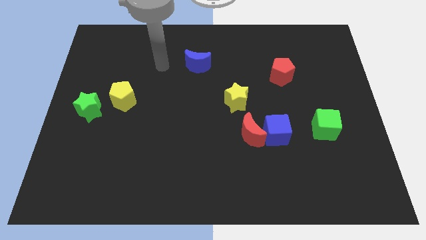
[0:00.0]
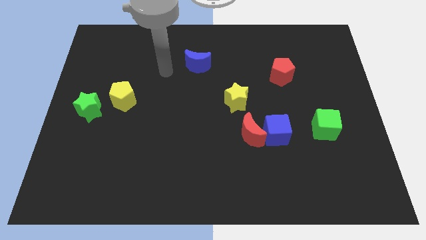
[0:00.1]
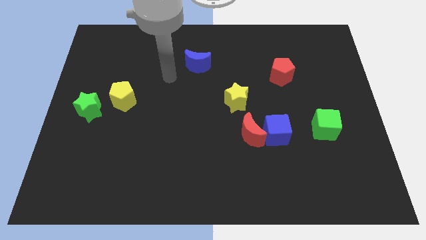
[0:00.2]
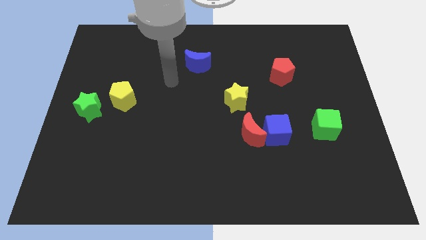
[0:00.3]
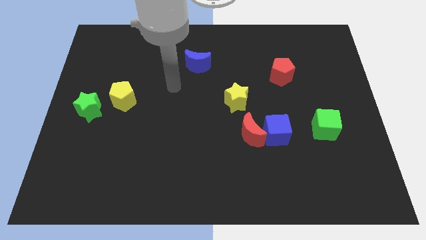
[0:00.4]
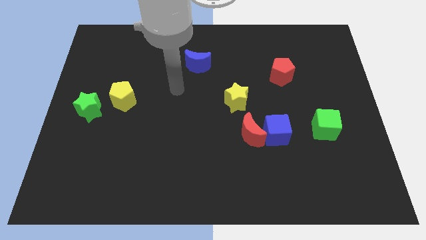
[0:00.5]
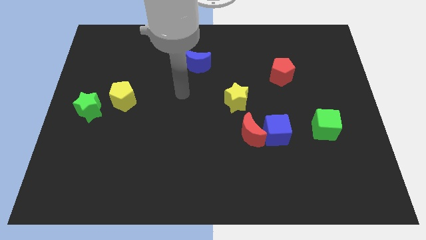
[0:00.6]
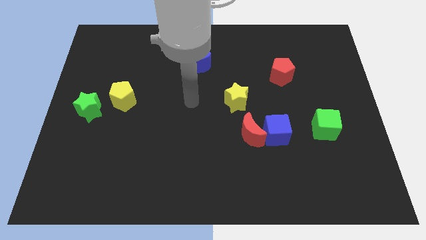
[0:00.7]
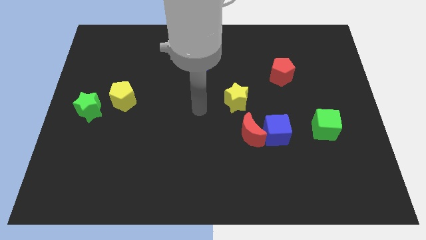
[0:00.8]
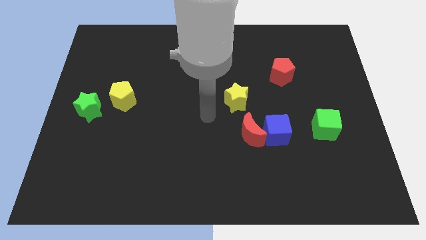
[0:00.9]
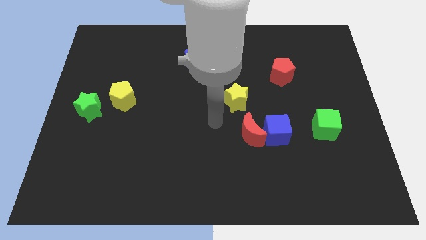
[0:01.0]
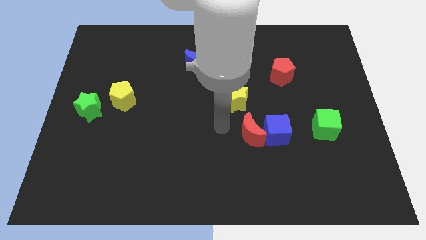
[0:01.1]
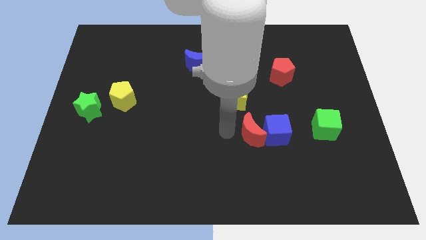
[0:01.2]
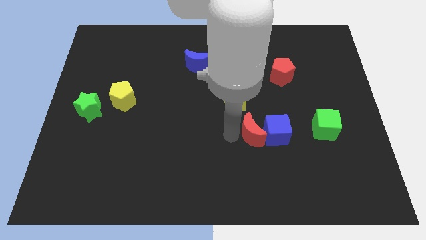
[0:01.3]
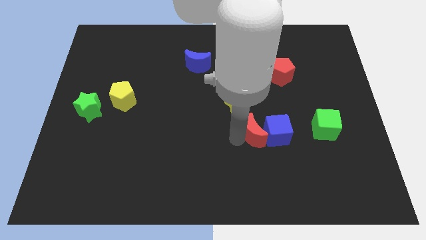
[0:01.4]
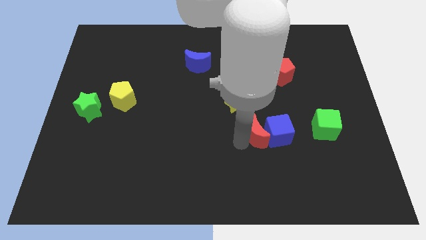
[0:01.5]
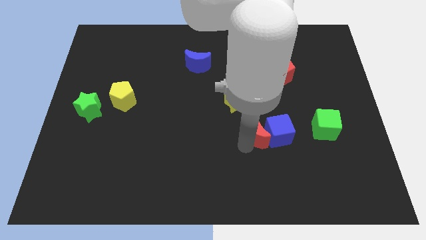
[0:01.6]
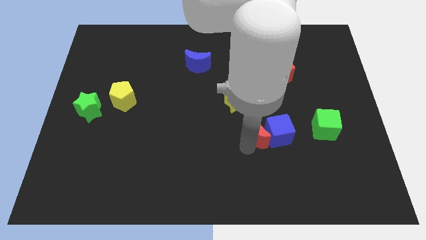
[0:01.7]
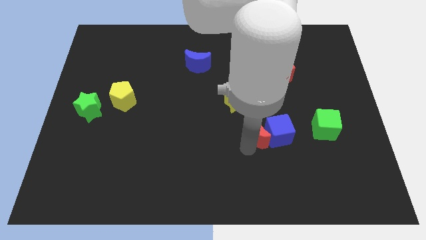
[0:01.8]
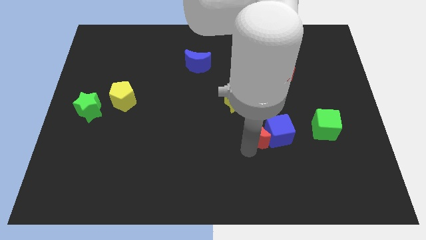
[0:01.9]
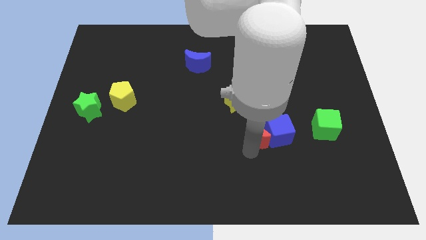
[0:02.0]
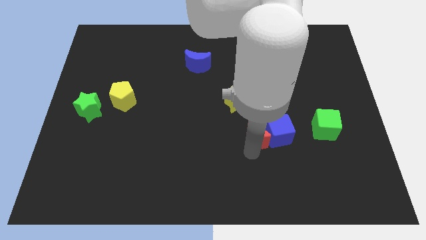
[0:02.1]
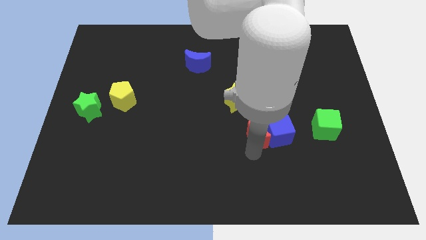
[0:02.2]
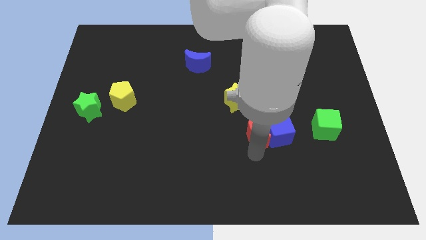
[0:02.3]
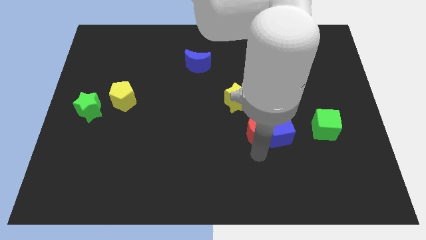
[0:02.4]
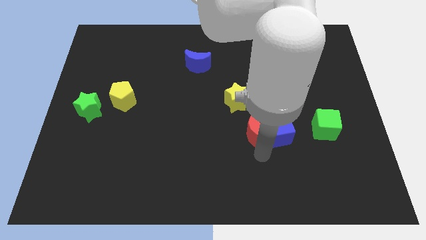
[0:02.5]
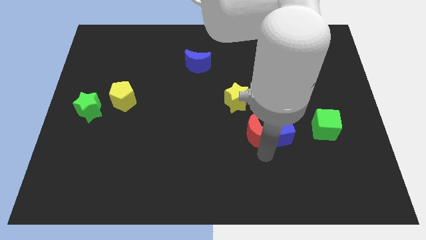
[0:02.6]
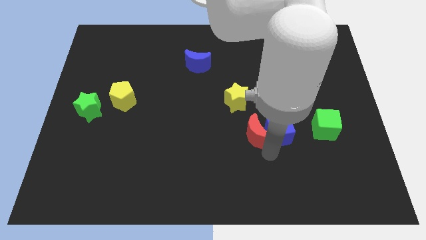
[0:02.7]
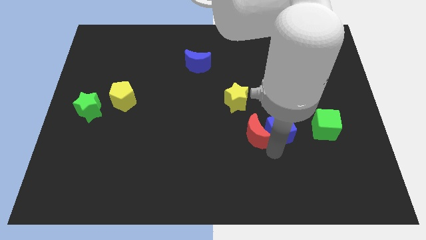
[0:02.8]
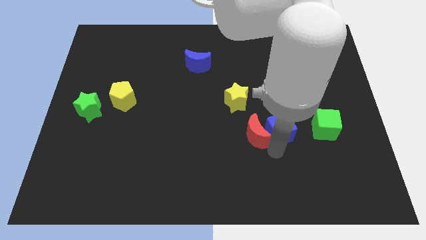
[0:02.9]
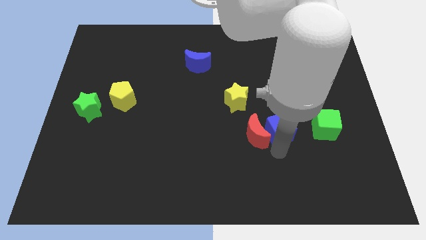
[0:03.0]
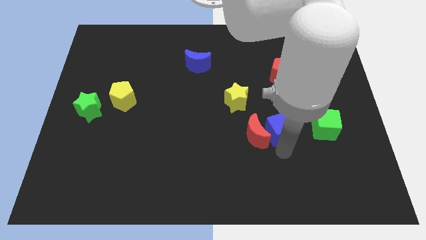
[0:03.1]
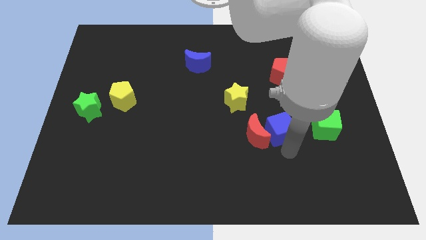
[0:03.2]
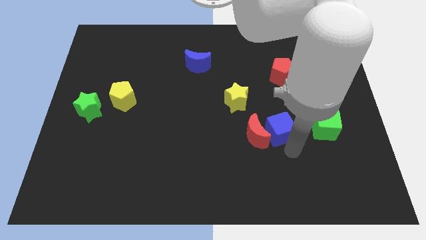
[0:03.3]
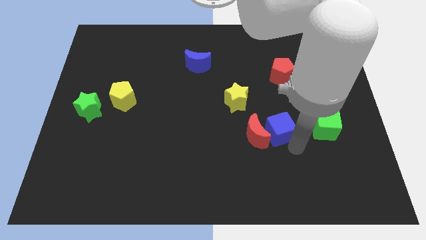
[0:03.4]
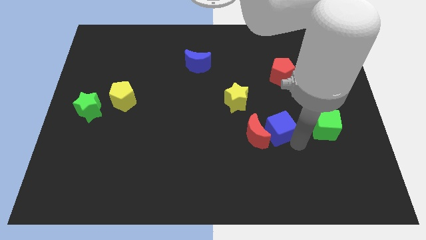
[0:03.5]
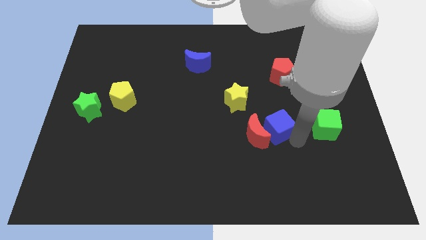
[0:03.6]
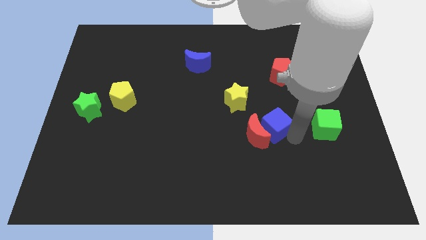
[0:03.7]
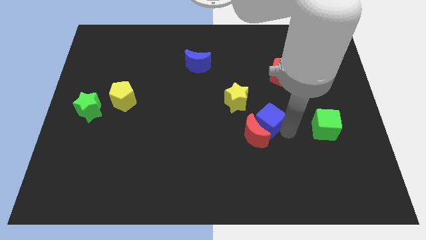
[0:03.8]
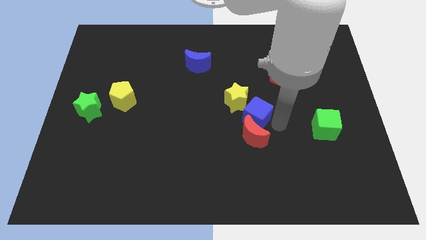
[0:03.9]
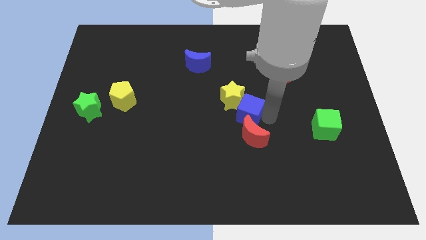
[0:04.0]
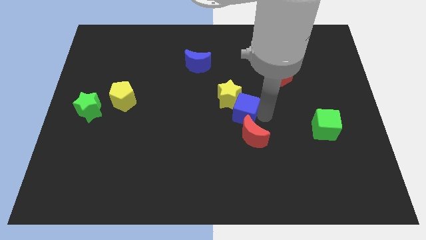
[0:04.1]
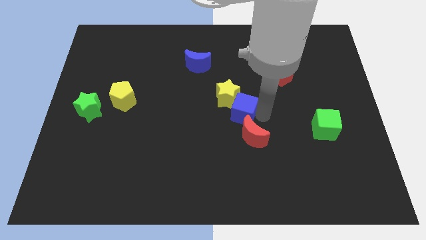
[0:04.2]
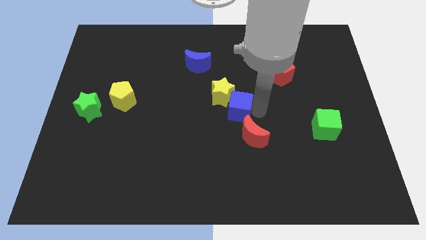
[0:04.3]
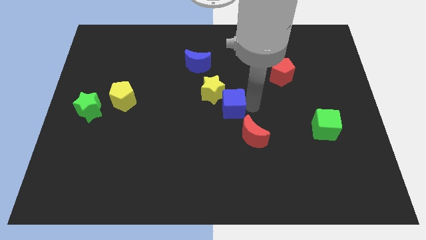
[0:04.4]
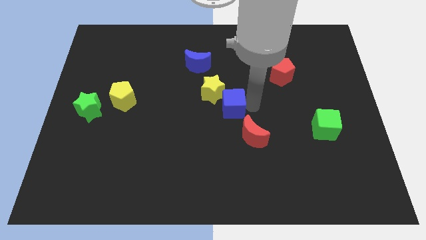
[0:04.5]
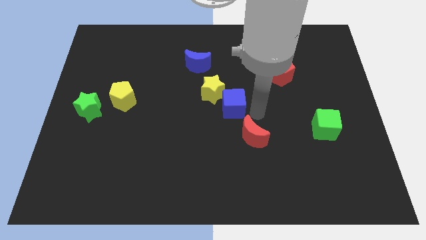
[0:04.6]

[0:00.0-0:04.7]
place the blue cube in between yellow star and red crescent

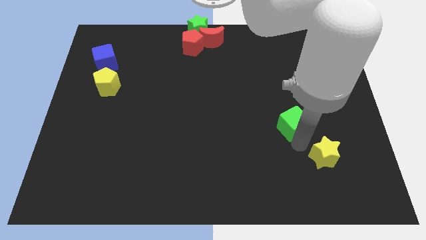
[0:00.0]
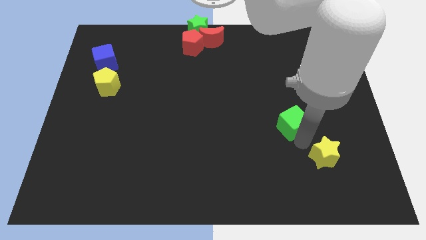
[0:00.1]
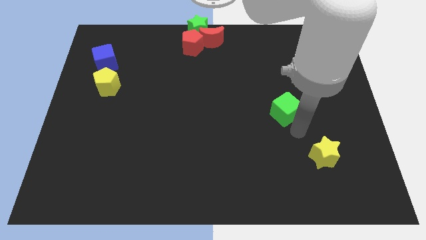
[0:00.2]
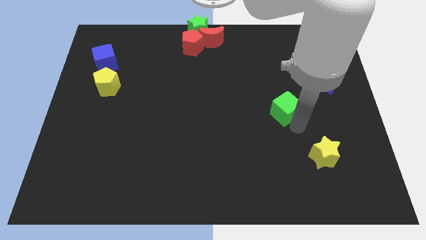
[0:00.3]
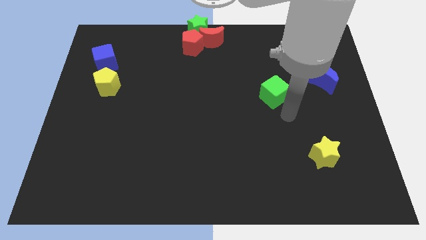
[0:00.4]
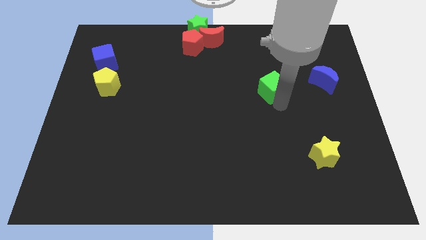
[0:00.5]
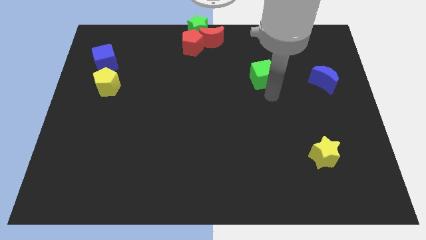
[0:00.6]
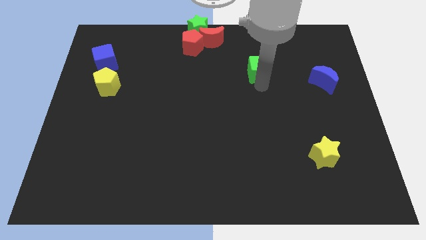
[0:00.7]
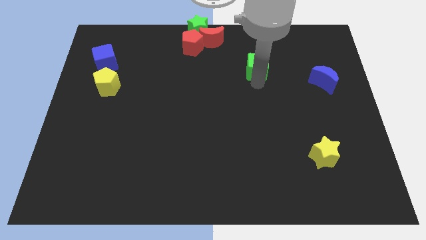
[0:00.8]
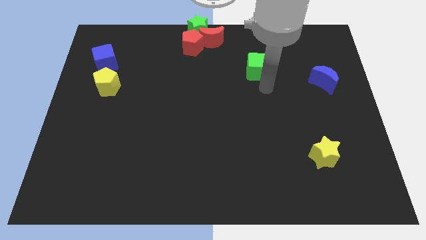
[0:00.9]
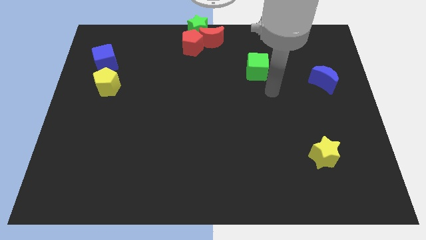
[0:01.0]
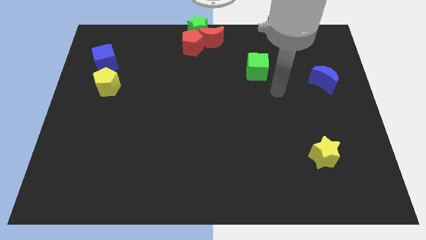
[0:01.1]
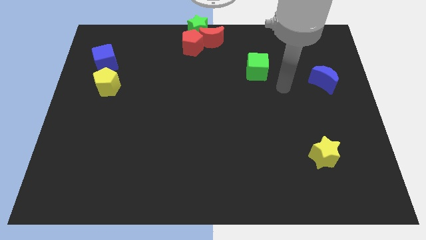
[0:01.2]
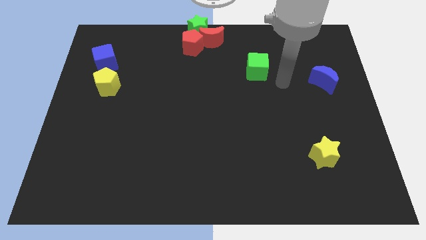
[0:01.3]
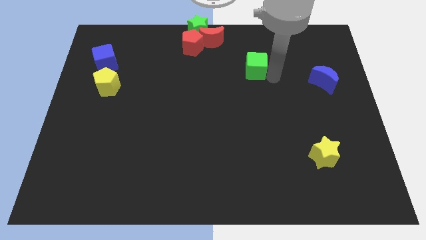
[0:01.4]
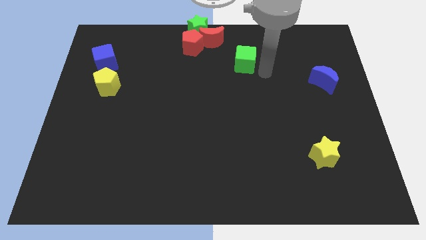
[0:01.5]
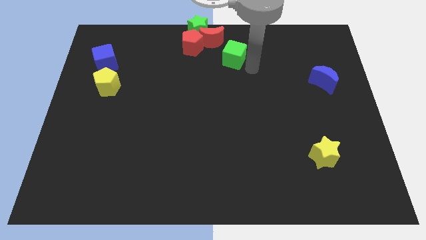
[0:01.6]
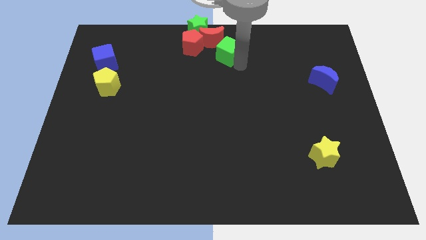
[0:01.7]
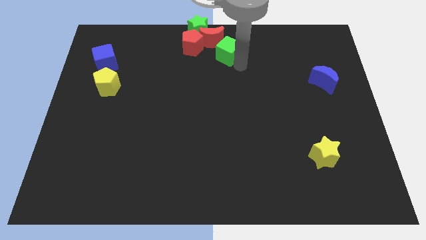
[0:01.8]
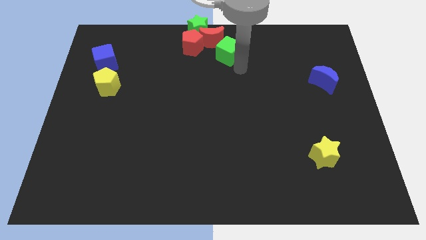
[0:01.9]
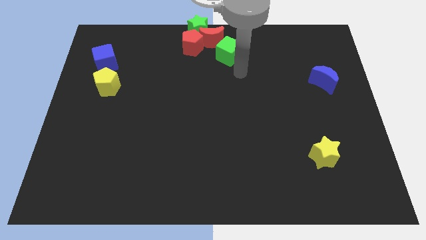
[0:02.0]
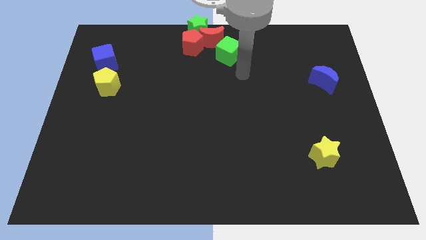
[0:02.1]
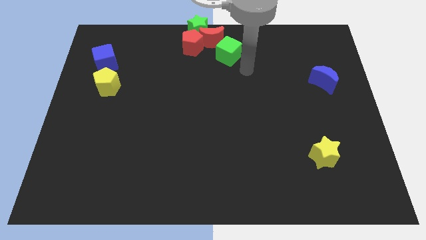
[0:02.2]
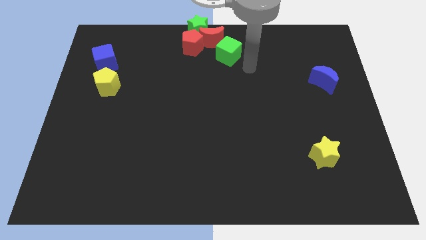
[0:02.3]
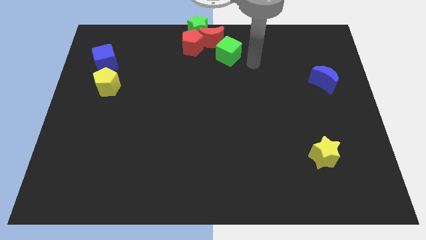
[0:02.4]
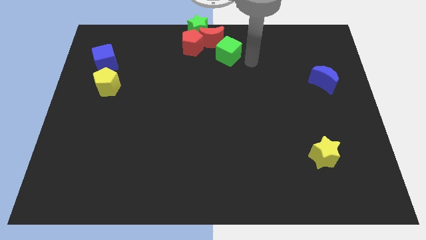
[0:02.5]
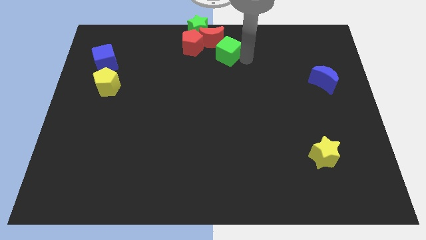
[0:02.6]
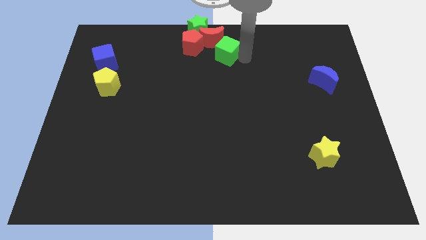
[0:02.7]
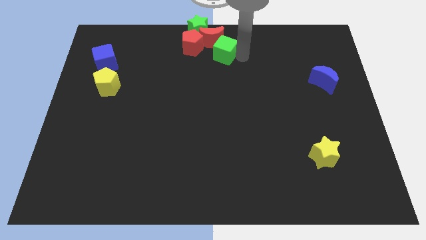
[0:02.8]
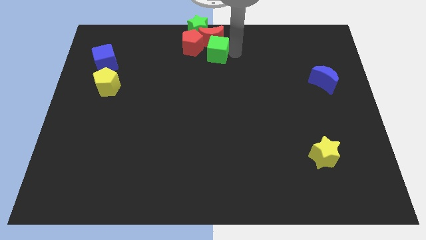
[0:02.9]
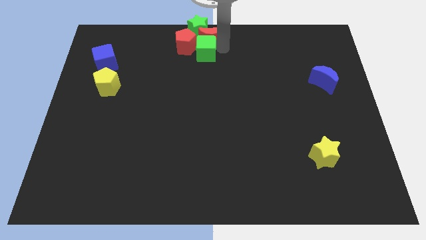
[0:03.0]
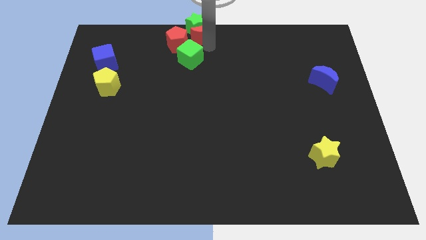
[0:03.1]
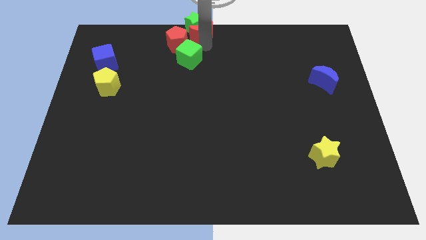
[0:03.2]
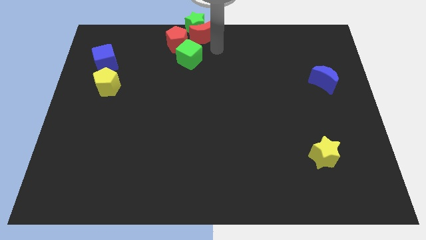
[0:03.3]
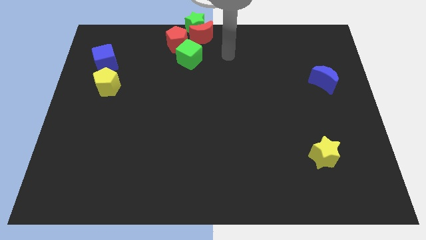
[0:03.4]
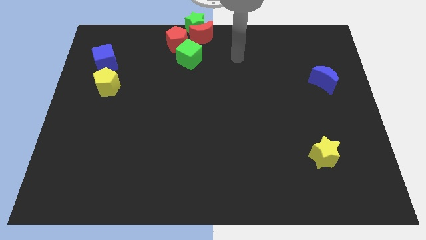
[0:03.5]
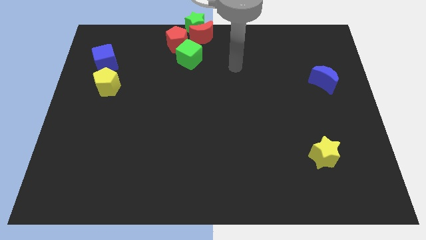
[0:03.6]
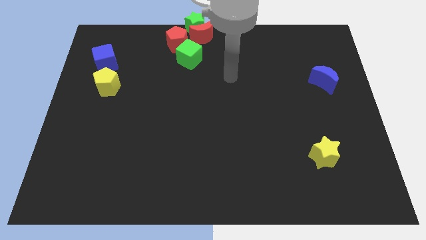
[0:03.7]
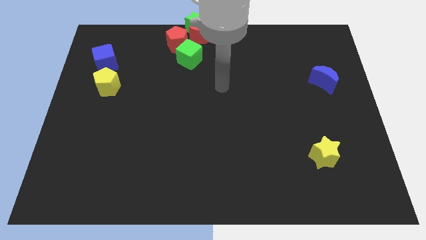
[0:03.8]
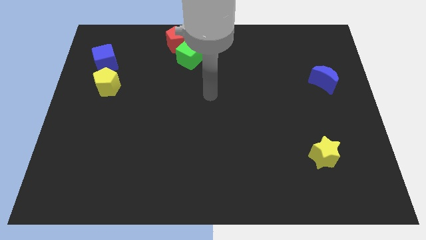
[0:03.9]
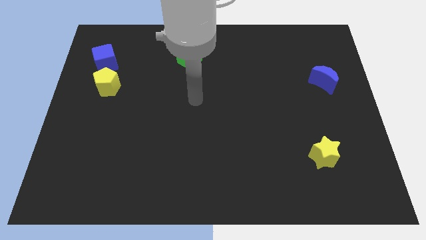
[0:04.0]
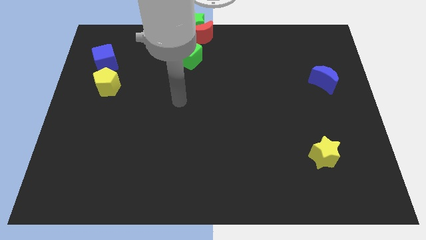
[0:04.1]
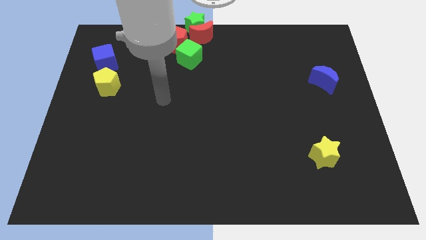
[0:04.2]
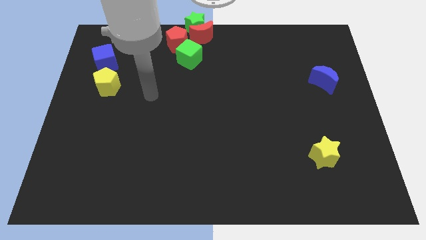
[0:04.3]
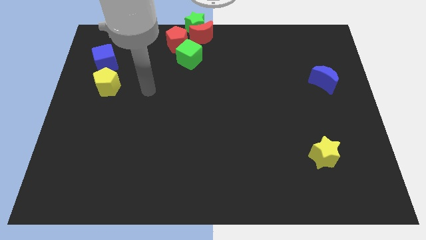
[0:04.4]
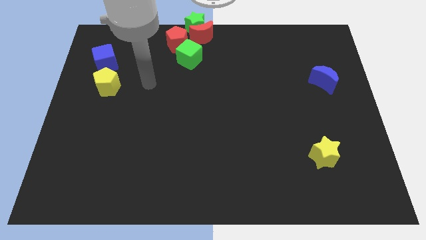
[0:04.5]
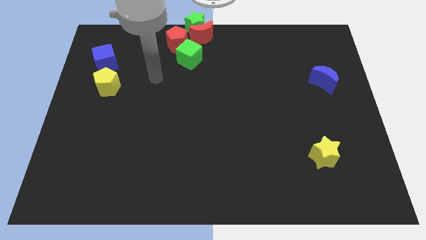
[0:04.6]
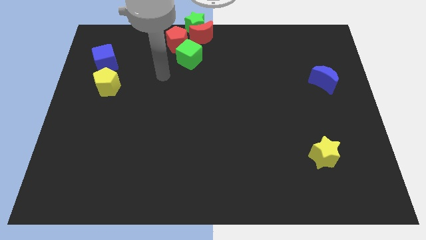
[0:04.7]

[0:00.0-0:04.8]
move green cube below the red blocks
